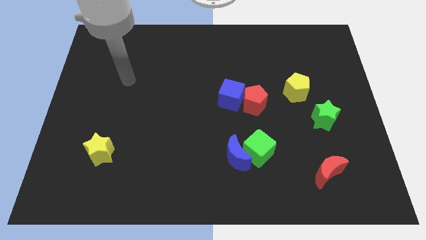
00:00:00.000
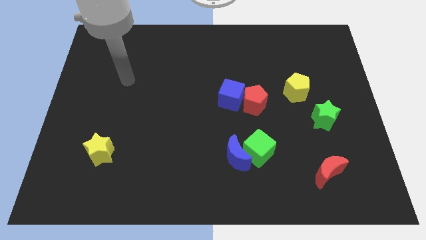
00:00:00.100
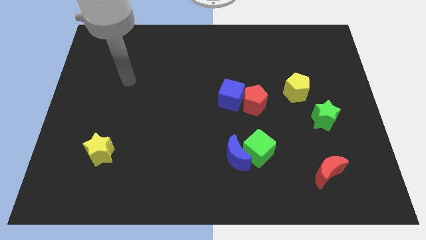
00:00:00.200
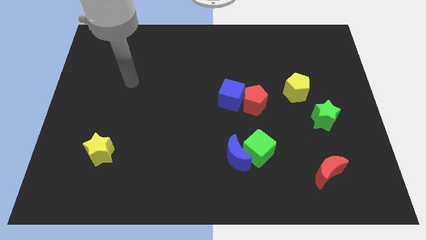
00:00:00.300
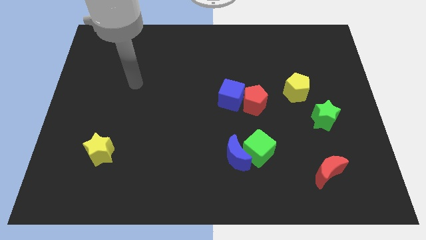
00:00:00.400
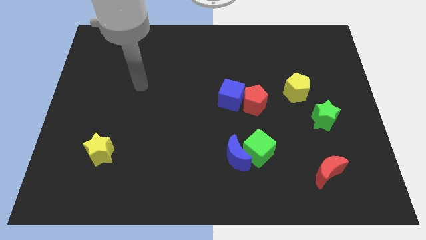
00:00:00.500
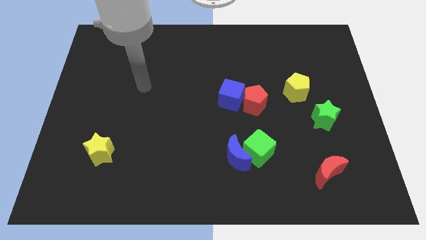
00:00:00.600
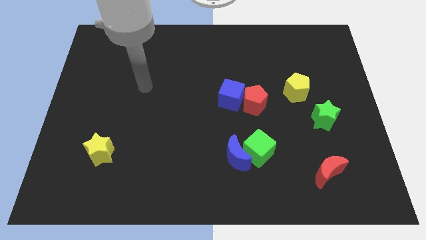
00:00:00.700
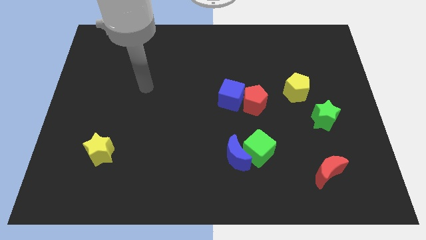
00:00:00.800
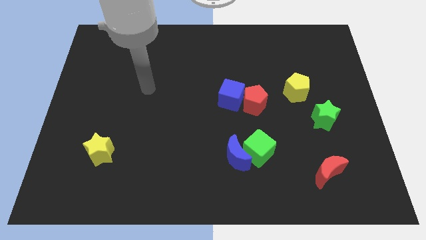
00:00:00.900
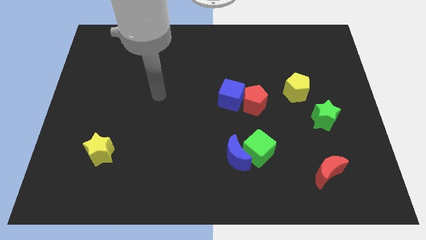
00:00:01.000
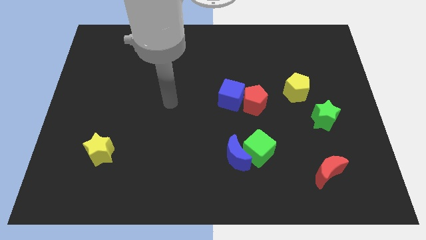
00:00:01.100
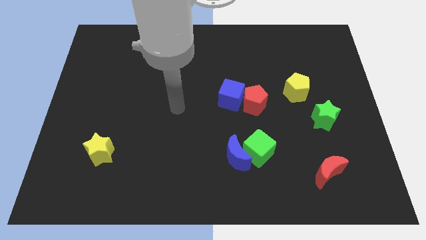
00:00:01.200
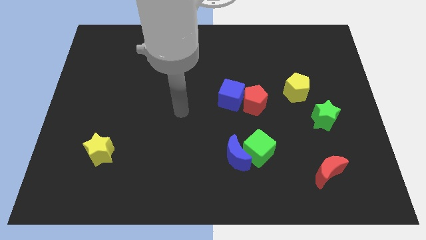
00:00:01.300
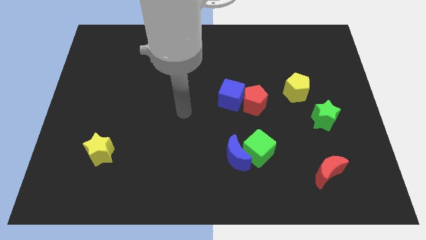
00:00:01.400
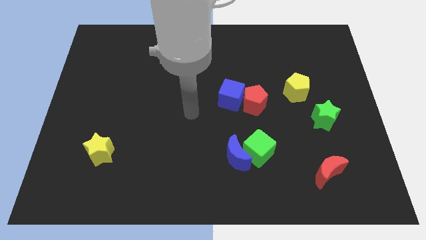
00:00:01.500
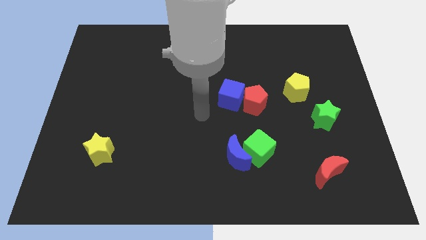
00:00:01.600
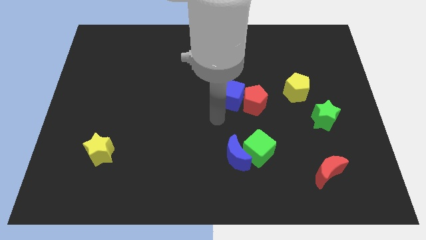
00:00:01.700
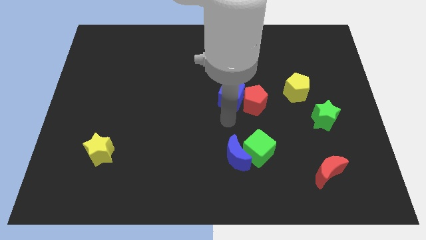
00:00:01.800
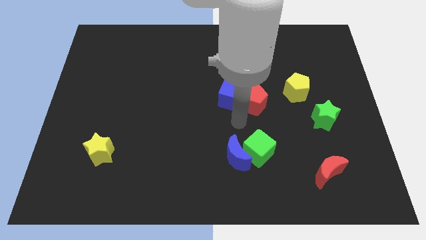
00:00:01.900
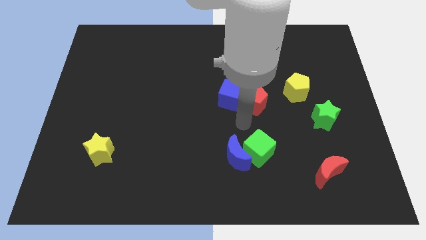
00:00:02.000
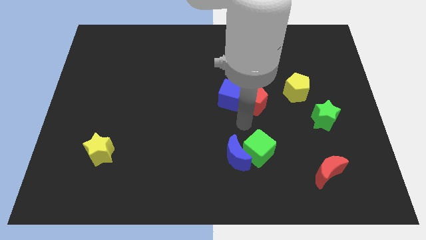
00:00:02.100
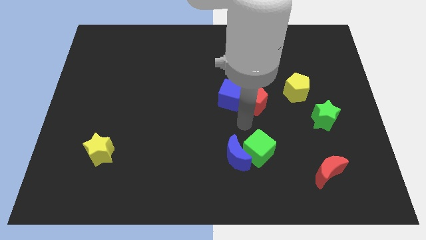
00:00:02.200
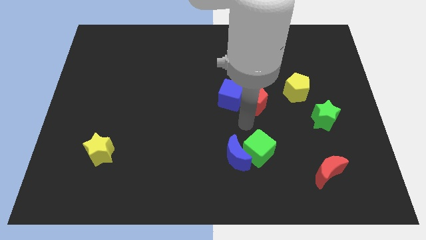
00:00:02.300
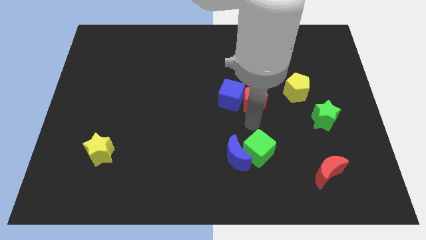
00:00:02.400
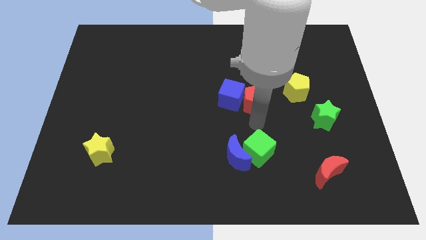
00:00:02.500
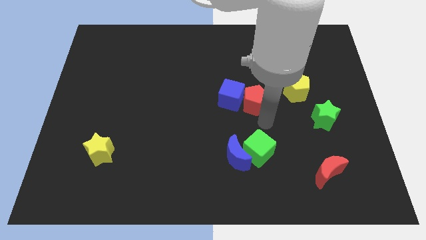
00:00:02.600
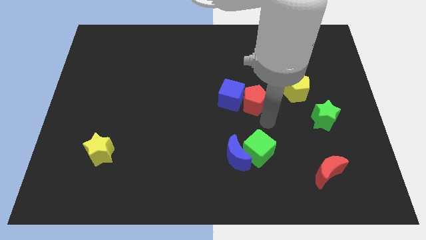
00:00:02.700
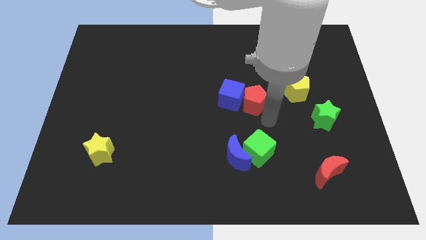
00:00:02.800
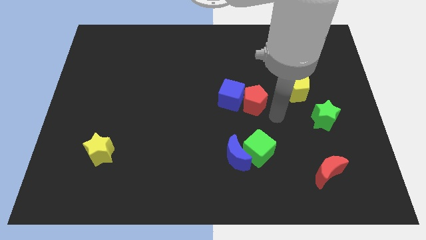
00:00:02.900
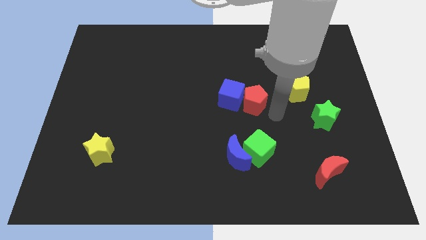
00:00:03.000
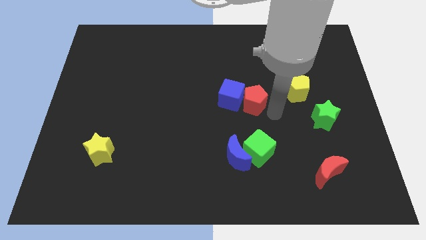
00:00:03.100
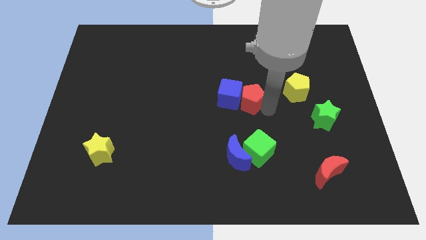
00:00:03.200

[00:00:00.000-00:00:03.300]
move arm to the red pentagon

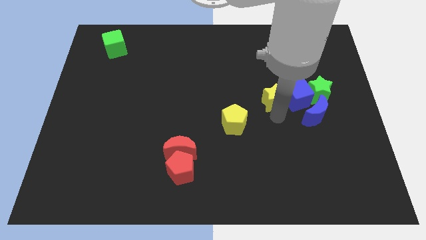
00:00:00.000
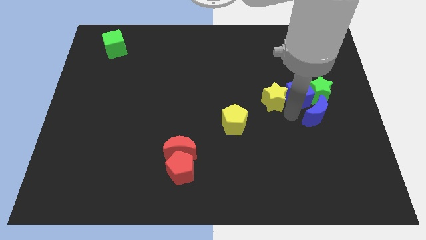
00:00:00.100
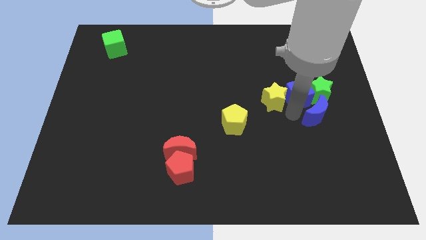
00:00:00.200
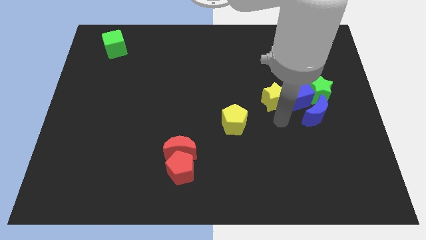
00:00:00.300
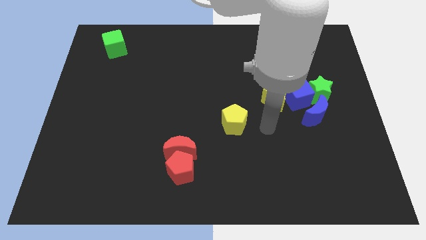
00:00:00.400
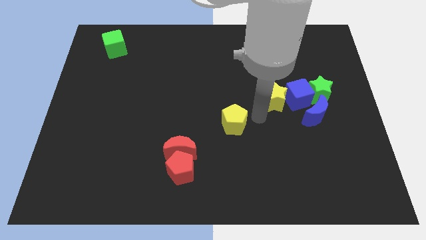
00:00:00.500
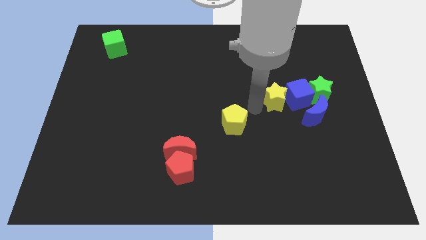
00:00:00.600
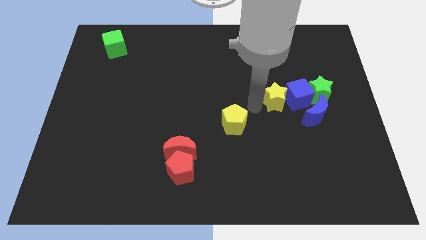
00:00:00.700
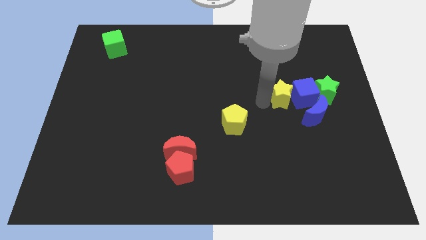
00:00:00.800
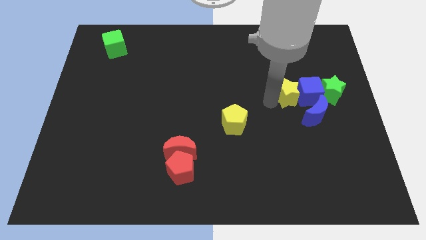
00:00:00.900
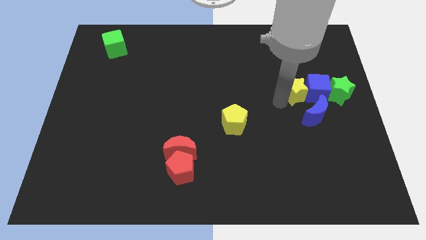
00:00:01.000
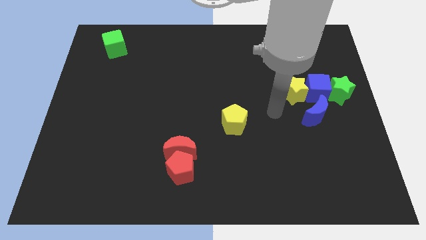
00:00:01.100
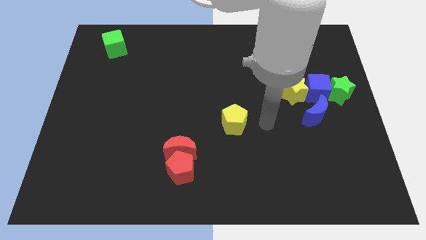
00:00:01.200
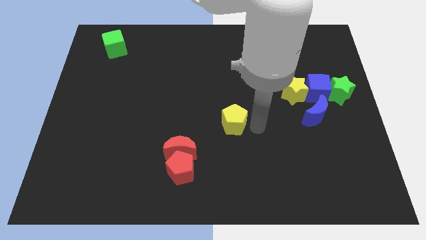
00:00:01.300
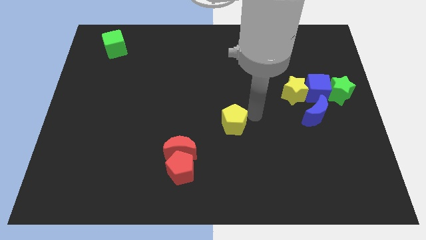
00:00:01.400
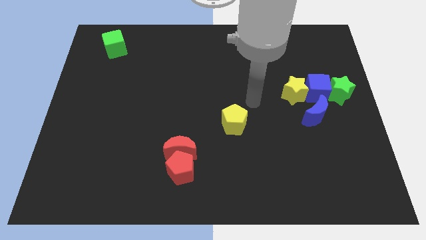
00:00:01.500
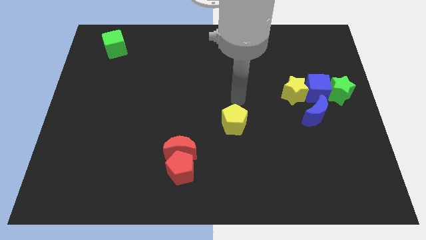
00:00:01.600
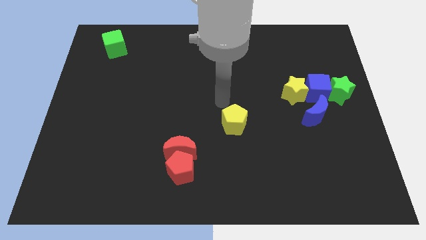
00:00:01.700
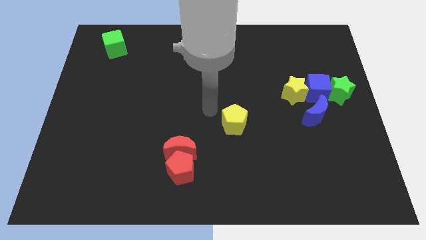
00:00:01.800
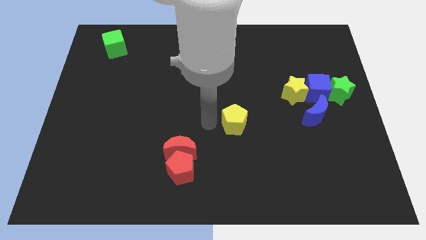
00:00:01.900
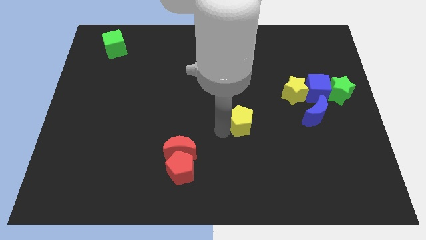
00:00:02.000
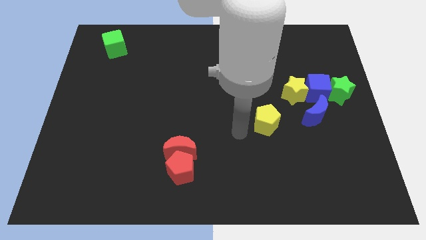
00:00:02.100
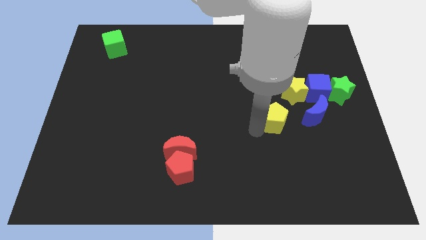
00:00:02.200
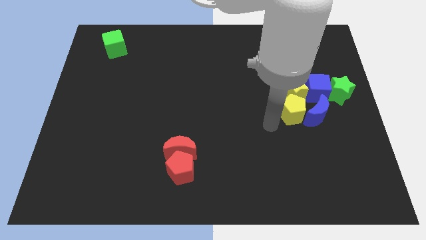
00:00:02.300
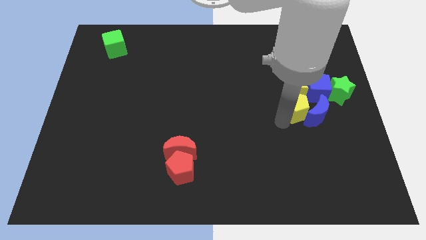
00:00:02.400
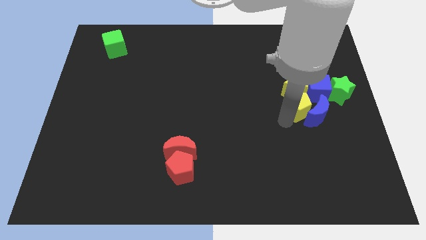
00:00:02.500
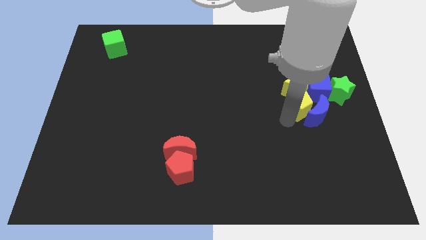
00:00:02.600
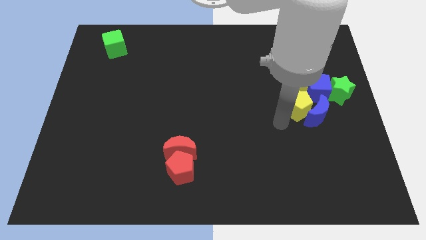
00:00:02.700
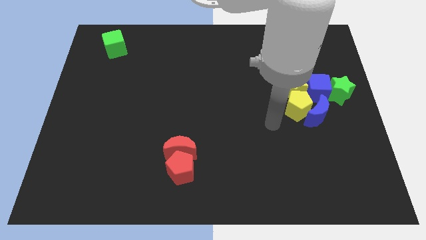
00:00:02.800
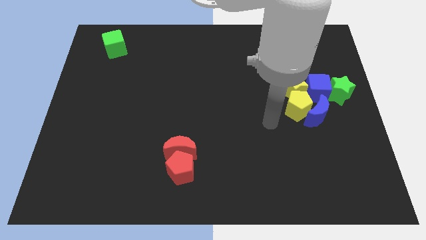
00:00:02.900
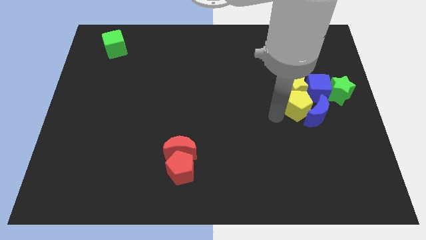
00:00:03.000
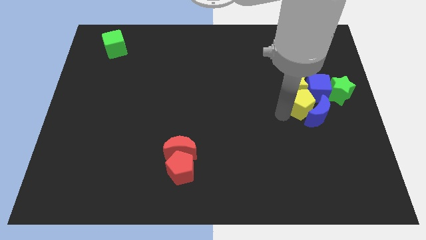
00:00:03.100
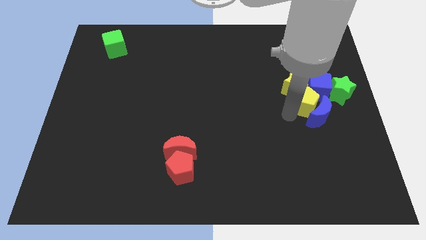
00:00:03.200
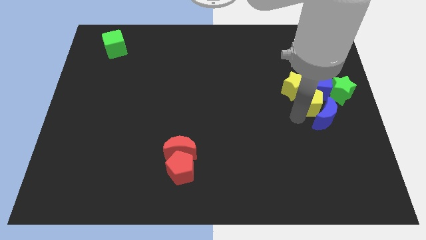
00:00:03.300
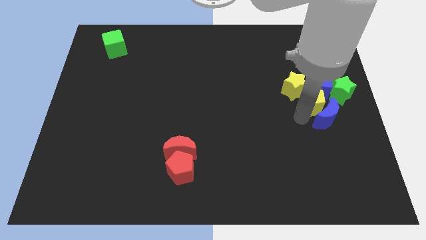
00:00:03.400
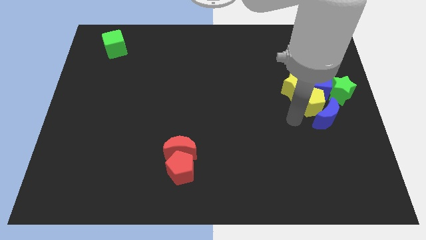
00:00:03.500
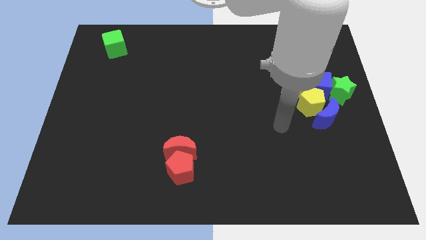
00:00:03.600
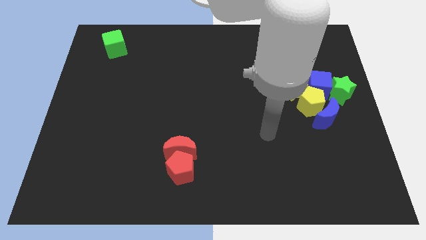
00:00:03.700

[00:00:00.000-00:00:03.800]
slide the yellow pentagon into the group of blocks at the center right of the board

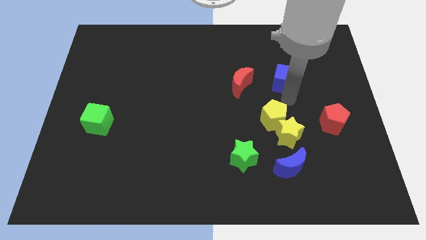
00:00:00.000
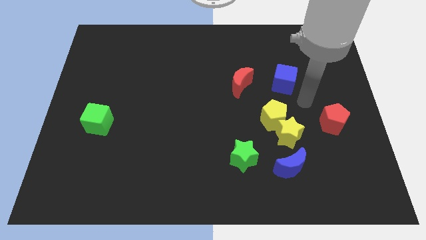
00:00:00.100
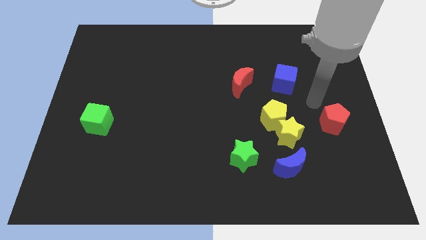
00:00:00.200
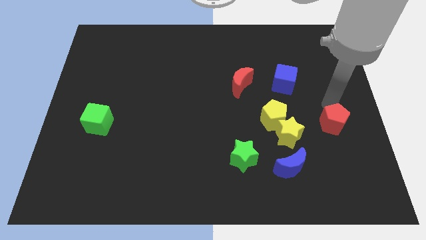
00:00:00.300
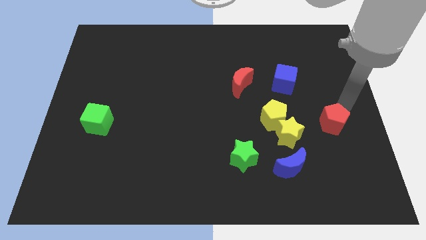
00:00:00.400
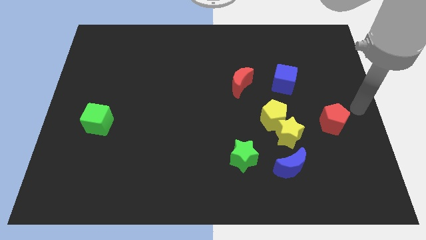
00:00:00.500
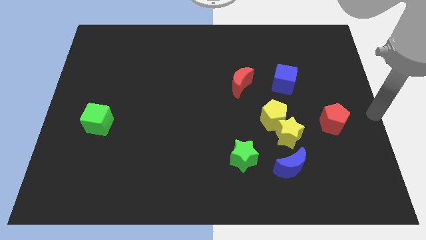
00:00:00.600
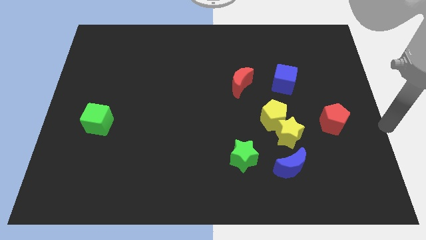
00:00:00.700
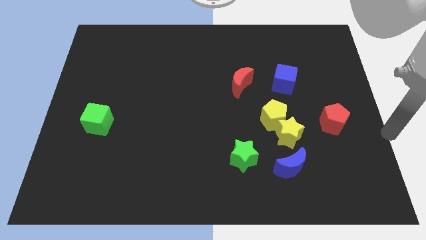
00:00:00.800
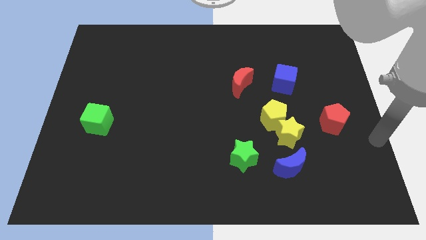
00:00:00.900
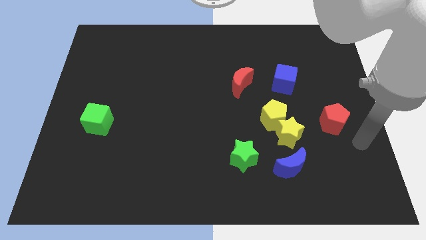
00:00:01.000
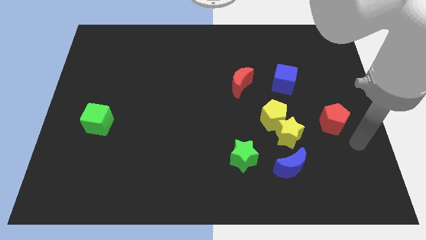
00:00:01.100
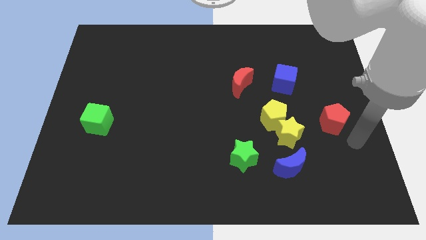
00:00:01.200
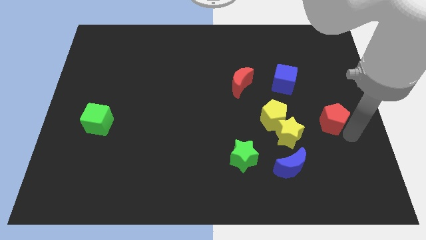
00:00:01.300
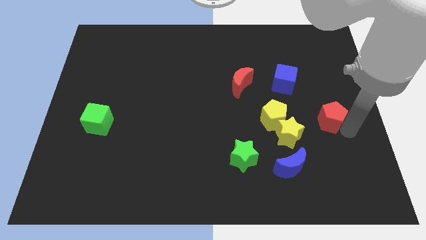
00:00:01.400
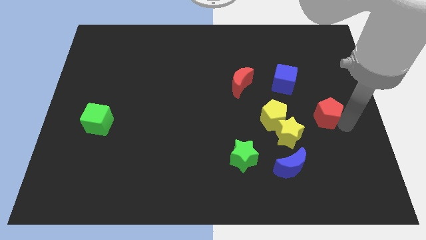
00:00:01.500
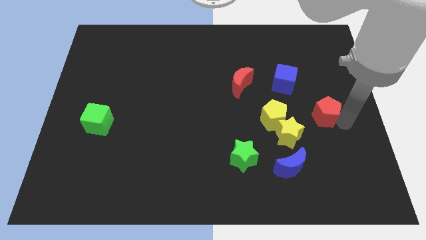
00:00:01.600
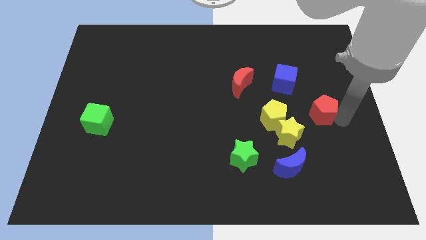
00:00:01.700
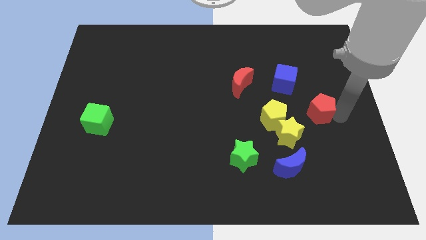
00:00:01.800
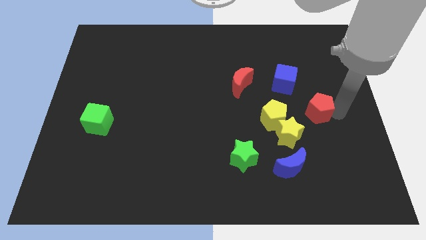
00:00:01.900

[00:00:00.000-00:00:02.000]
push the red pentagon upward
